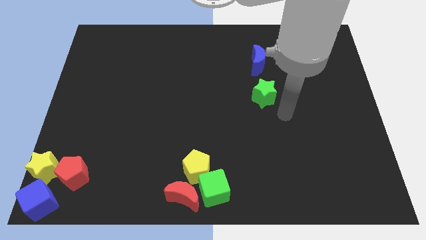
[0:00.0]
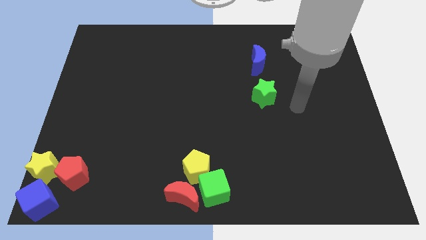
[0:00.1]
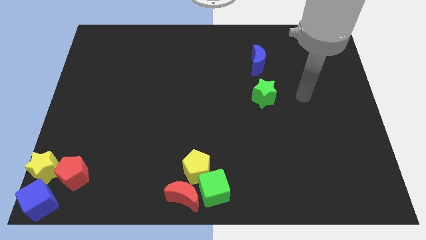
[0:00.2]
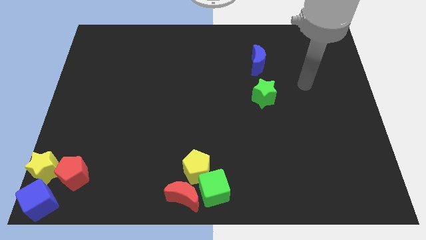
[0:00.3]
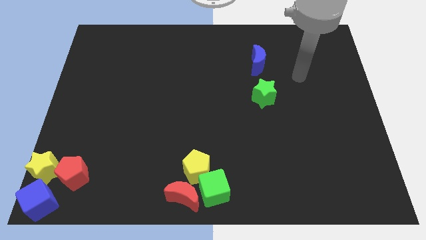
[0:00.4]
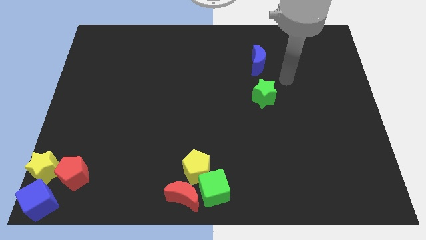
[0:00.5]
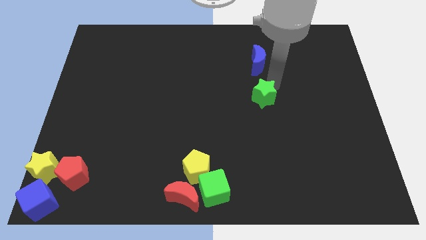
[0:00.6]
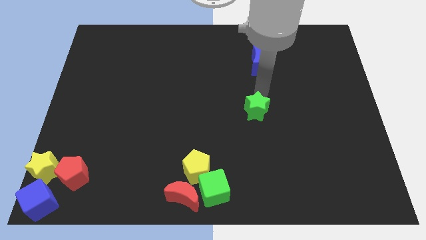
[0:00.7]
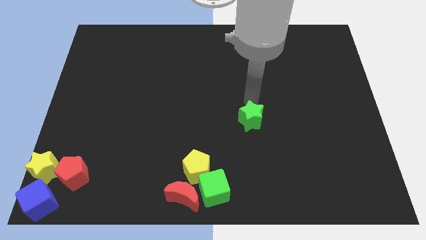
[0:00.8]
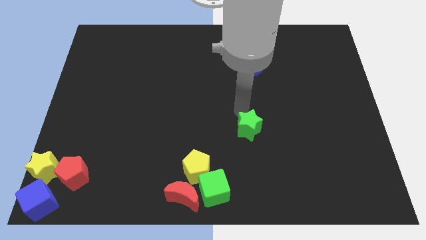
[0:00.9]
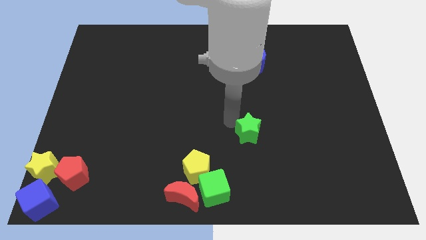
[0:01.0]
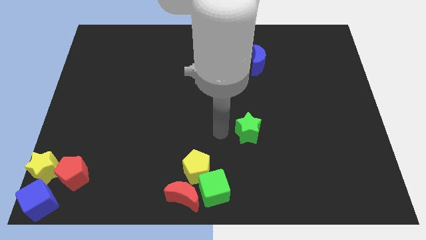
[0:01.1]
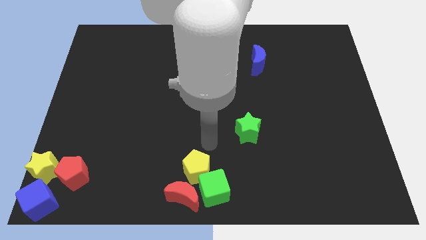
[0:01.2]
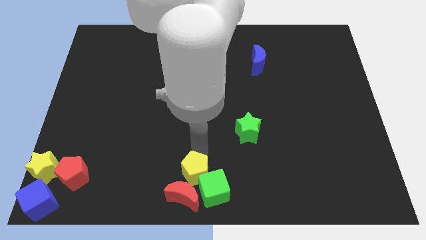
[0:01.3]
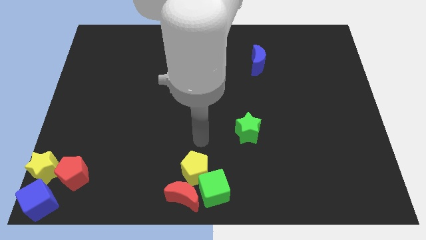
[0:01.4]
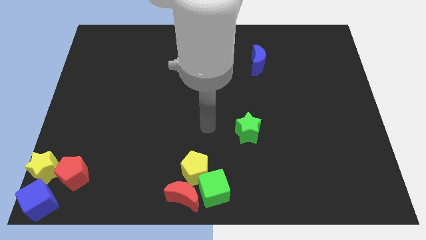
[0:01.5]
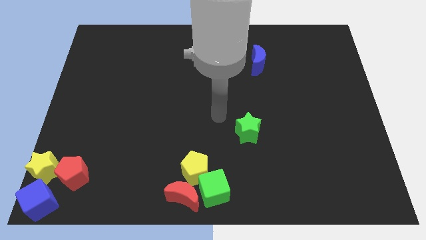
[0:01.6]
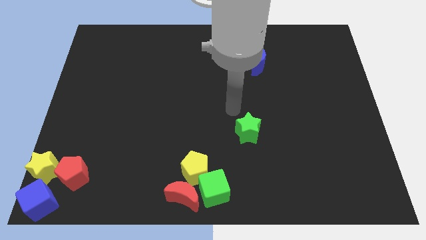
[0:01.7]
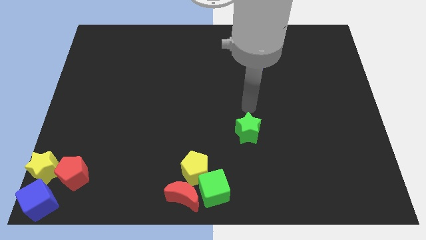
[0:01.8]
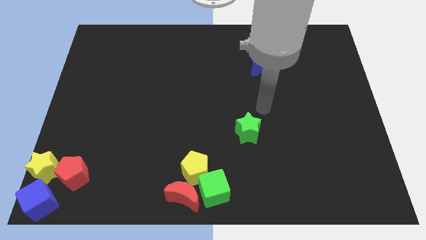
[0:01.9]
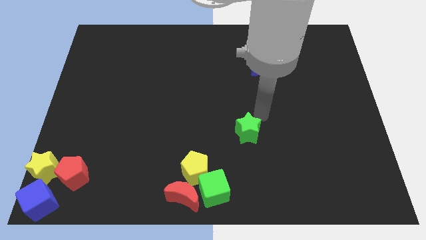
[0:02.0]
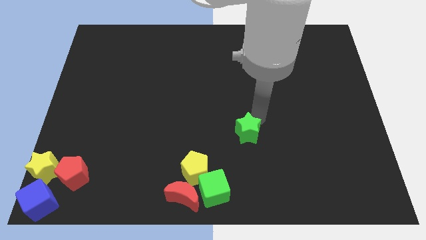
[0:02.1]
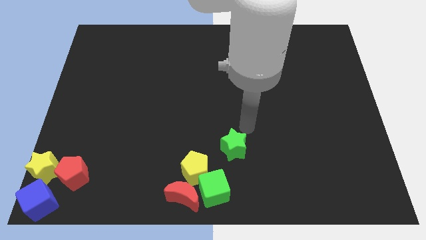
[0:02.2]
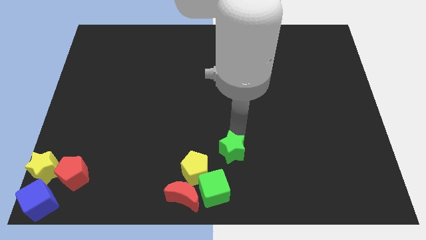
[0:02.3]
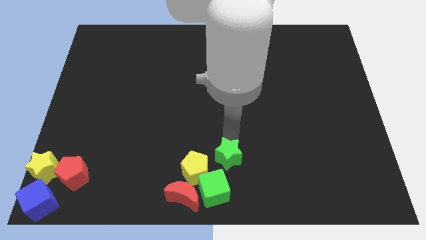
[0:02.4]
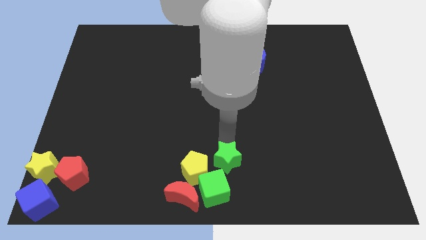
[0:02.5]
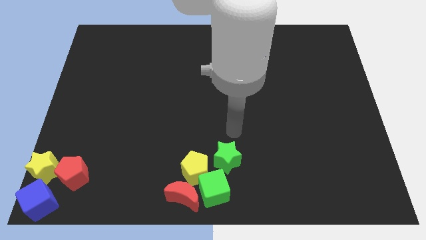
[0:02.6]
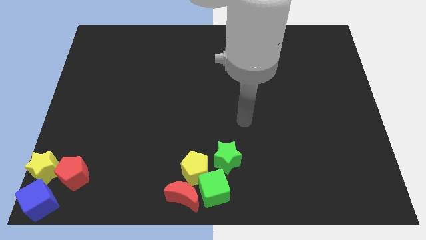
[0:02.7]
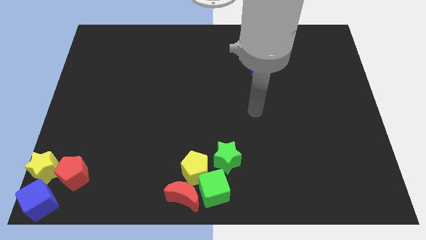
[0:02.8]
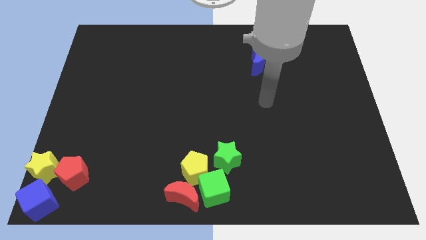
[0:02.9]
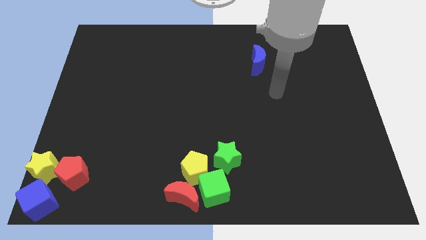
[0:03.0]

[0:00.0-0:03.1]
move the green star to the top right of the green cube

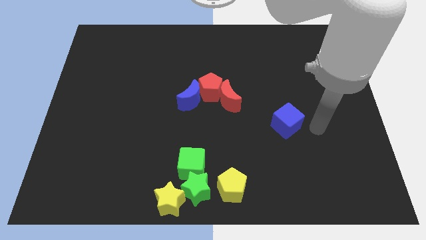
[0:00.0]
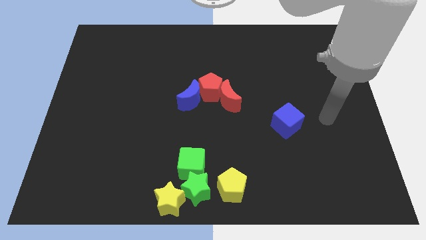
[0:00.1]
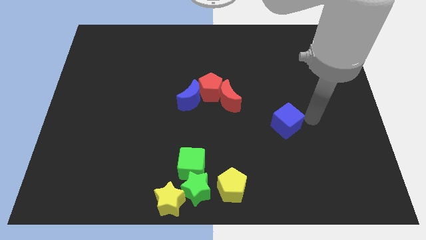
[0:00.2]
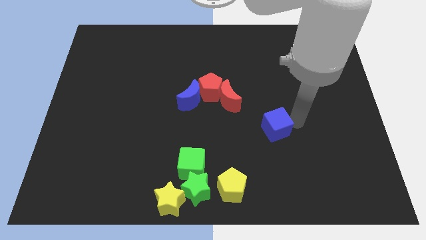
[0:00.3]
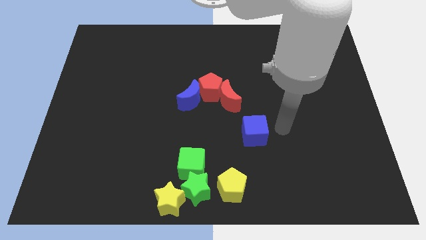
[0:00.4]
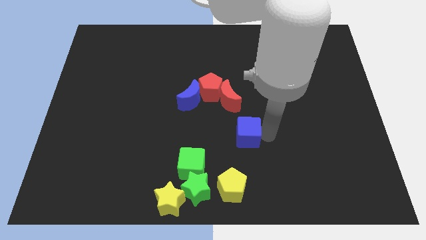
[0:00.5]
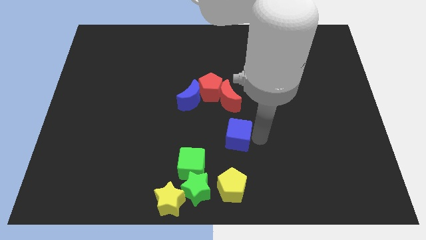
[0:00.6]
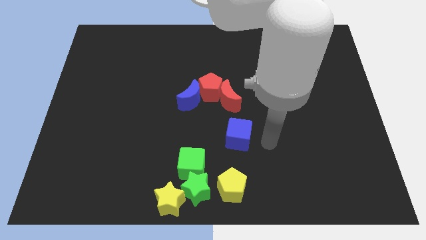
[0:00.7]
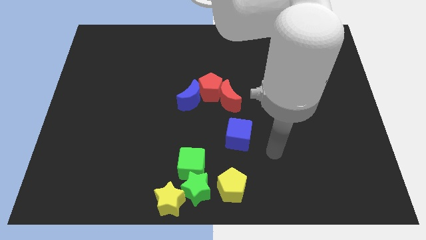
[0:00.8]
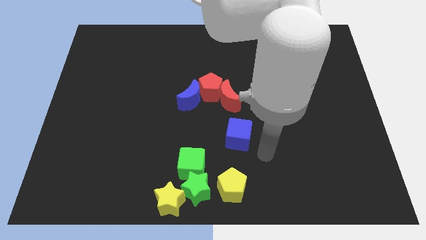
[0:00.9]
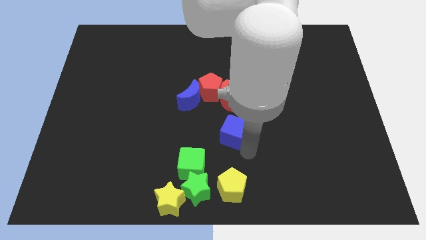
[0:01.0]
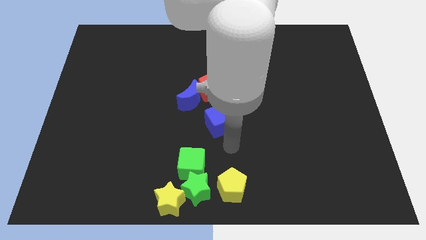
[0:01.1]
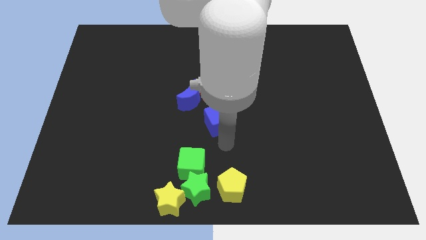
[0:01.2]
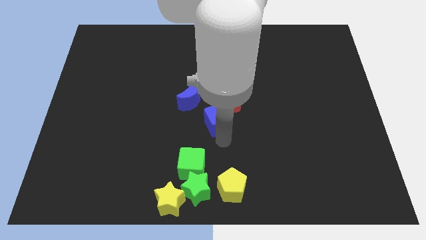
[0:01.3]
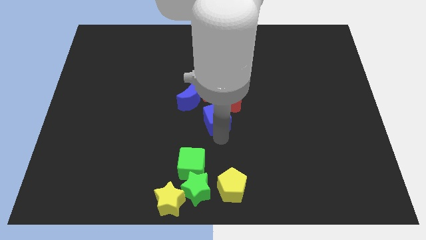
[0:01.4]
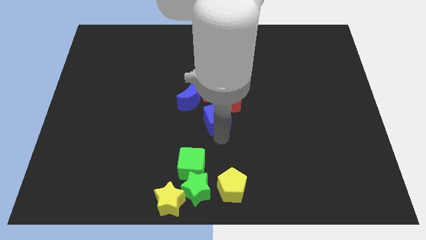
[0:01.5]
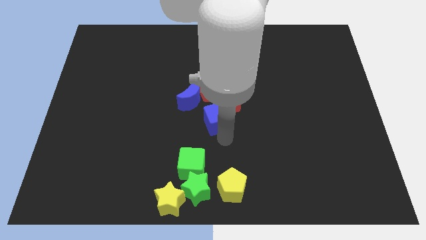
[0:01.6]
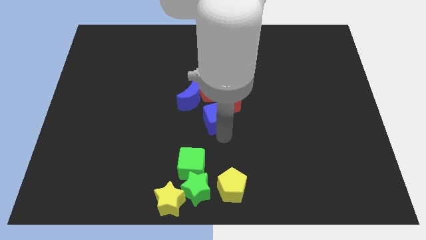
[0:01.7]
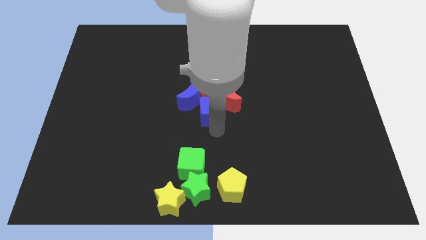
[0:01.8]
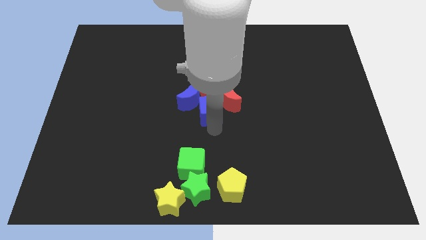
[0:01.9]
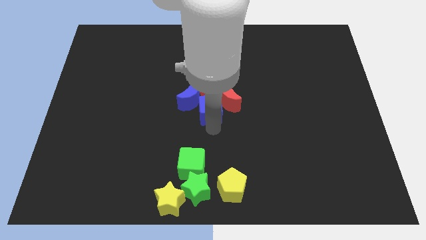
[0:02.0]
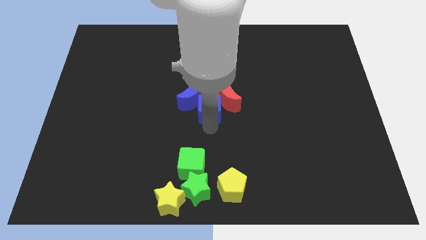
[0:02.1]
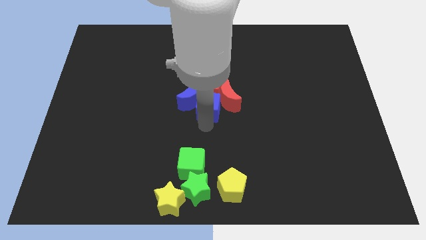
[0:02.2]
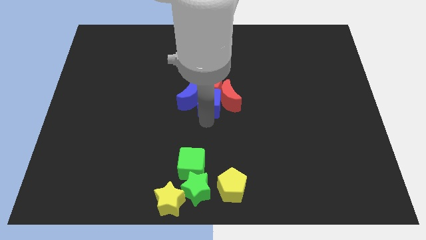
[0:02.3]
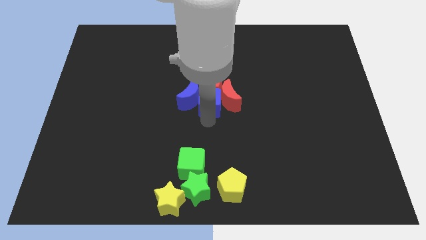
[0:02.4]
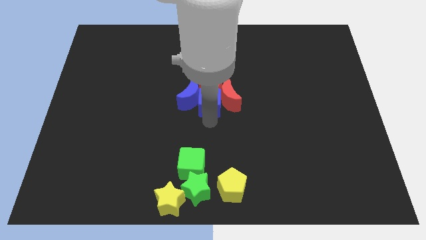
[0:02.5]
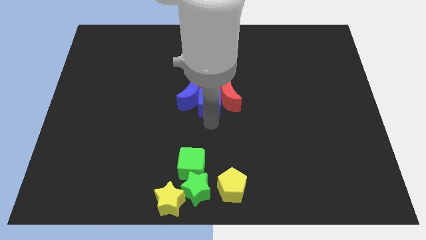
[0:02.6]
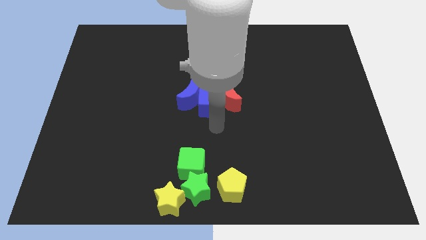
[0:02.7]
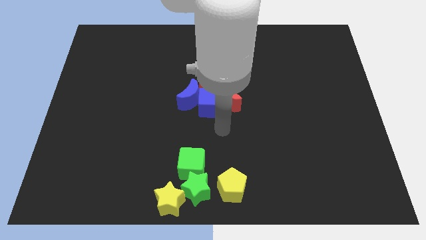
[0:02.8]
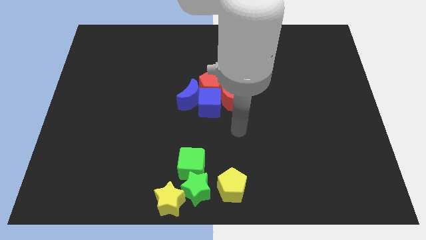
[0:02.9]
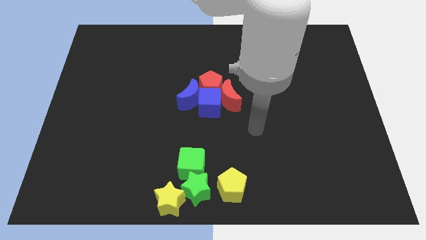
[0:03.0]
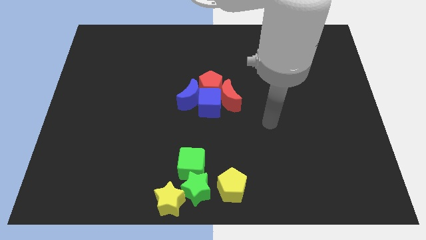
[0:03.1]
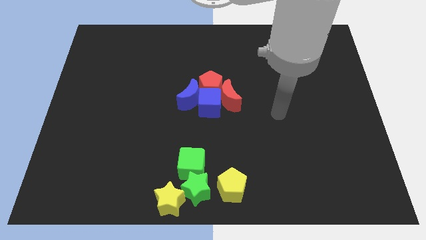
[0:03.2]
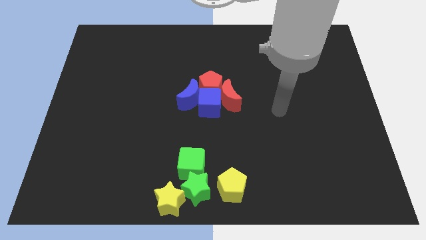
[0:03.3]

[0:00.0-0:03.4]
push the blue cube under the red pentagon

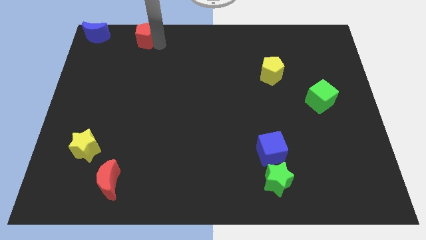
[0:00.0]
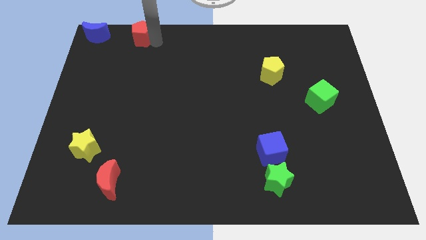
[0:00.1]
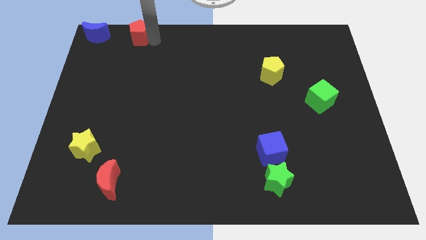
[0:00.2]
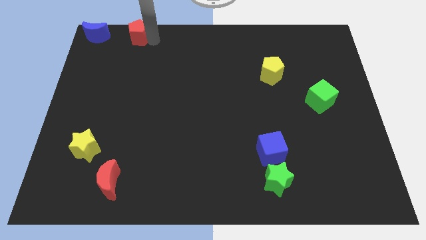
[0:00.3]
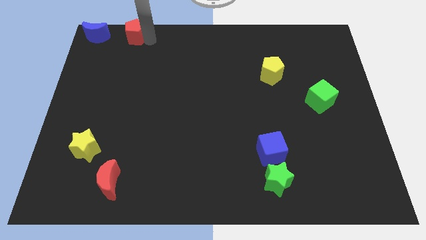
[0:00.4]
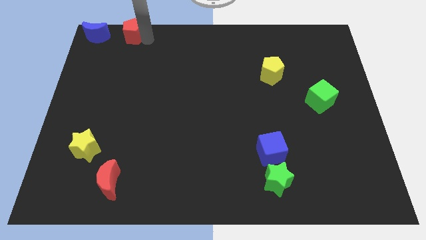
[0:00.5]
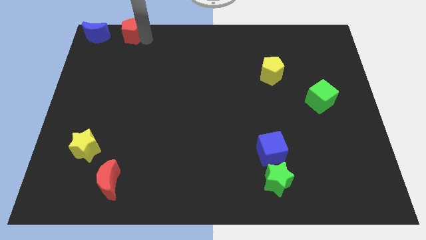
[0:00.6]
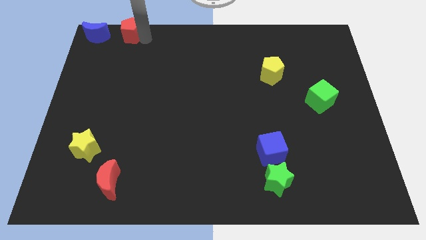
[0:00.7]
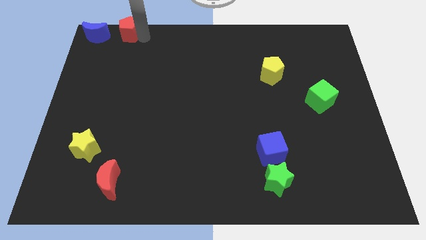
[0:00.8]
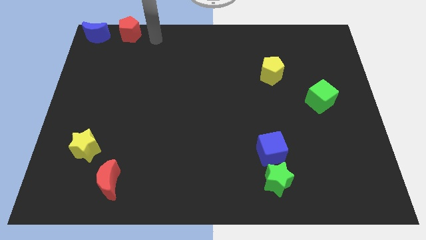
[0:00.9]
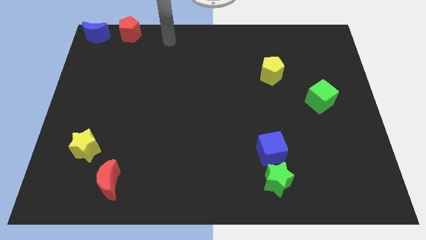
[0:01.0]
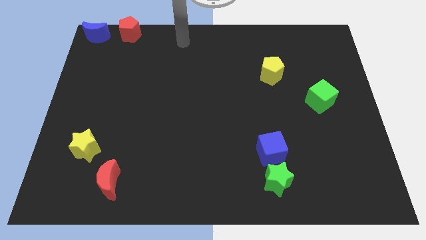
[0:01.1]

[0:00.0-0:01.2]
place the red pentagon close to the blue moon

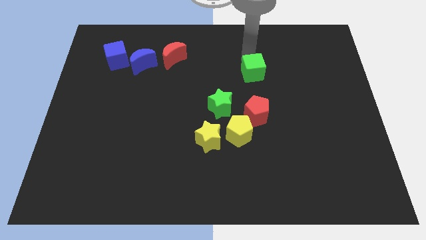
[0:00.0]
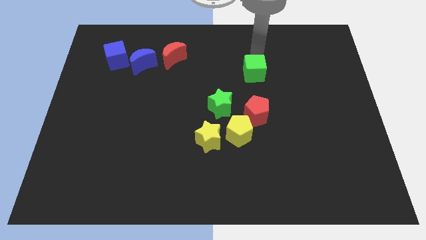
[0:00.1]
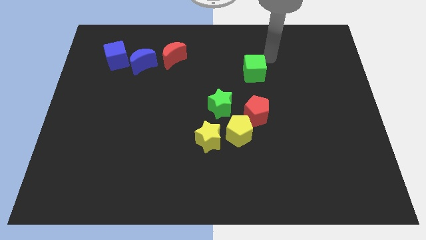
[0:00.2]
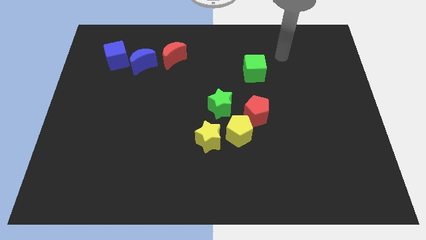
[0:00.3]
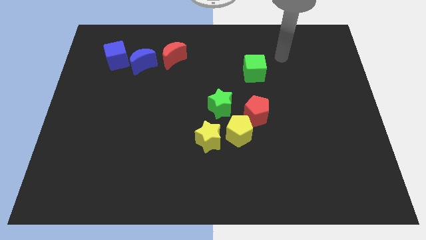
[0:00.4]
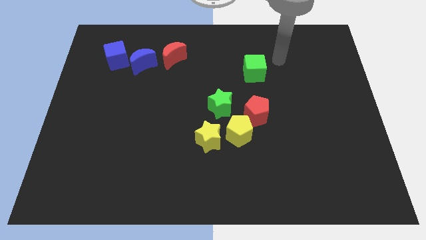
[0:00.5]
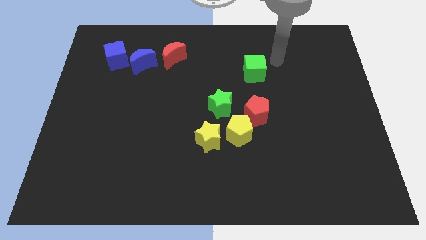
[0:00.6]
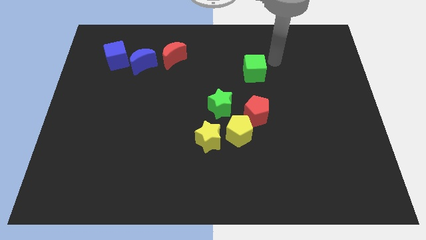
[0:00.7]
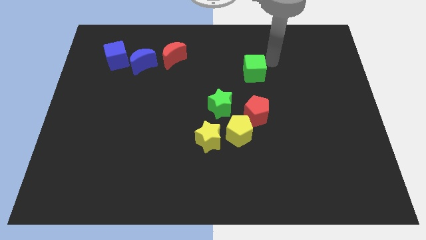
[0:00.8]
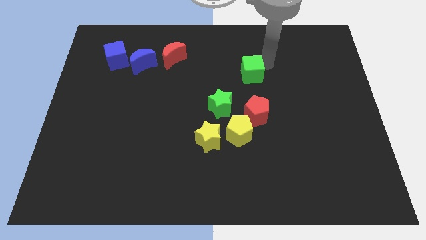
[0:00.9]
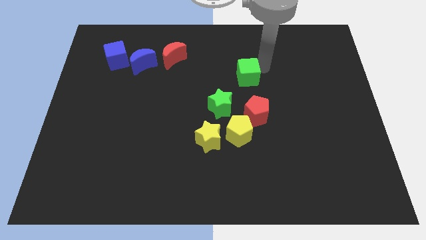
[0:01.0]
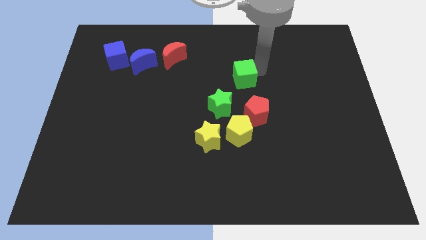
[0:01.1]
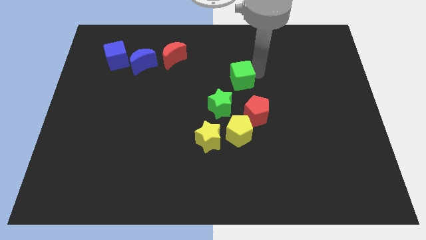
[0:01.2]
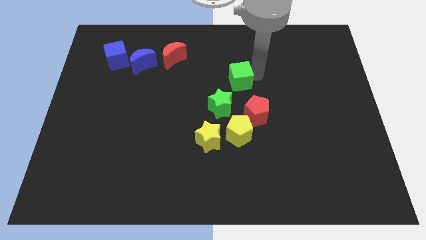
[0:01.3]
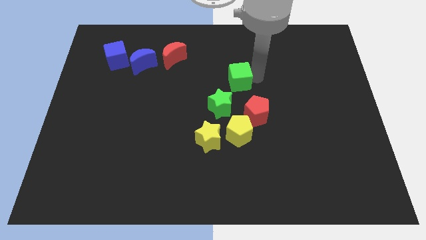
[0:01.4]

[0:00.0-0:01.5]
place the green cube towards the top right side of the green star
